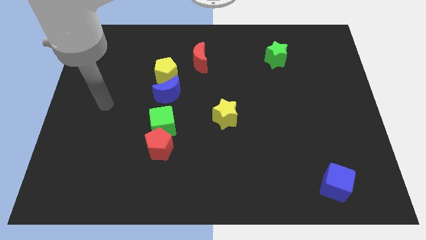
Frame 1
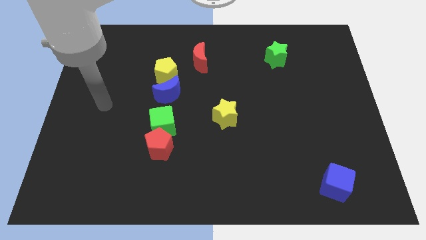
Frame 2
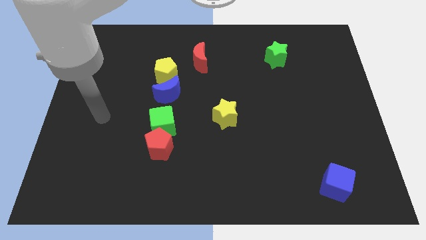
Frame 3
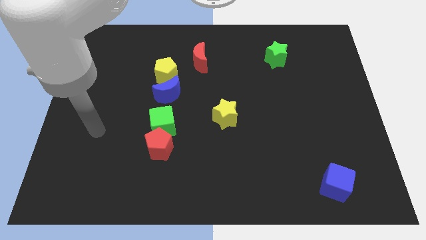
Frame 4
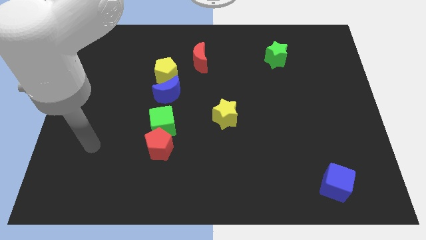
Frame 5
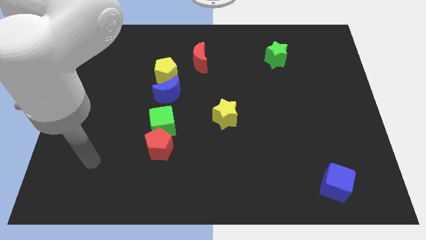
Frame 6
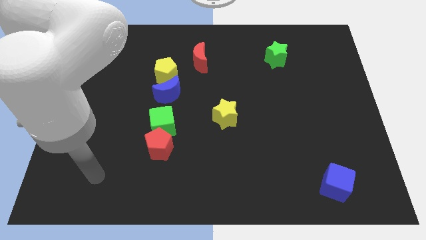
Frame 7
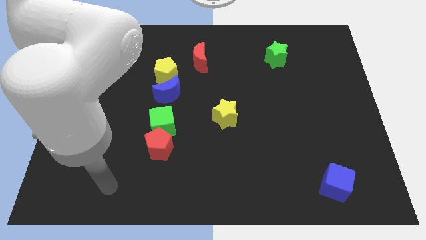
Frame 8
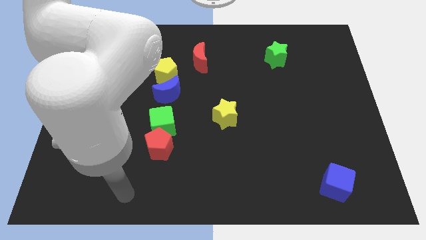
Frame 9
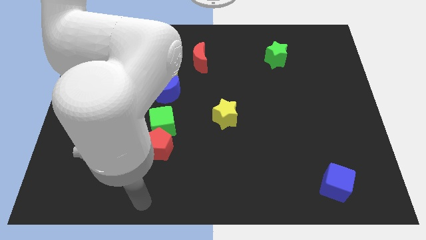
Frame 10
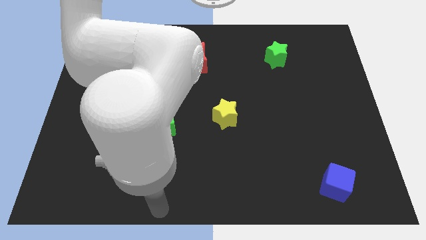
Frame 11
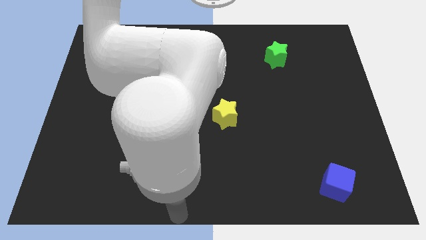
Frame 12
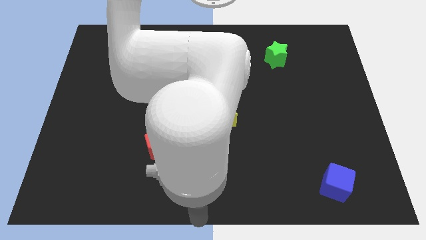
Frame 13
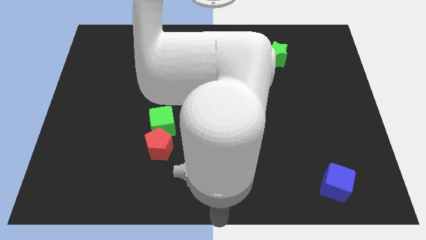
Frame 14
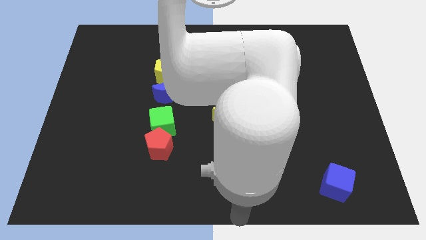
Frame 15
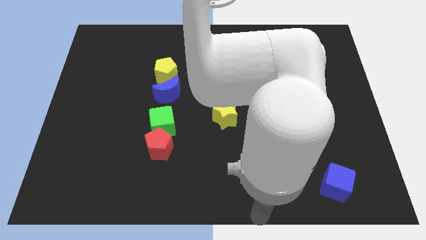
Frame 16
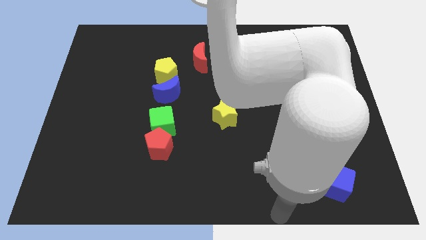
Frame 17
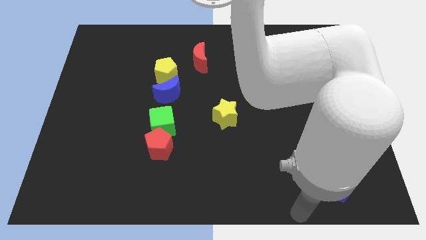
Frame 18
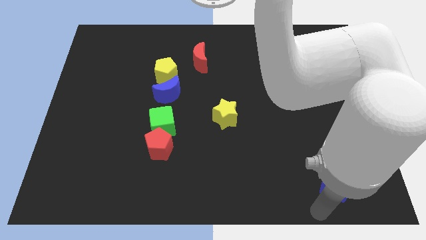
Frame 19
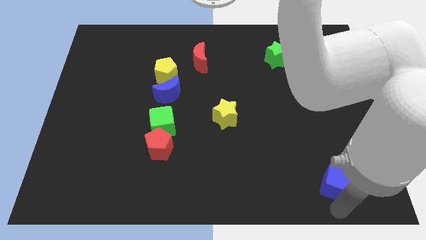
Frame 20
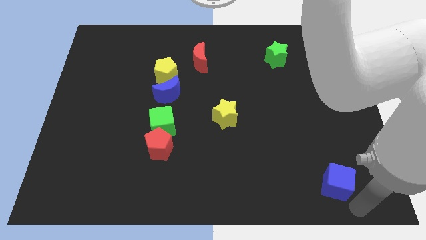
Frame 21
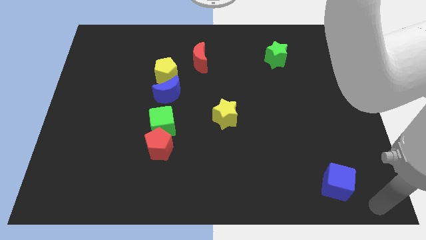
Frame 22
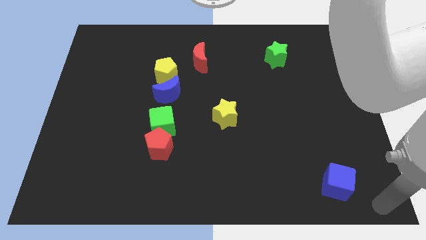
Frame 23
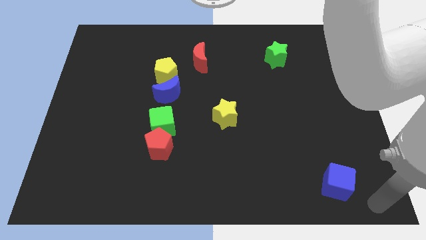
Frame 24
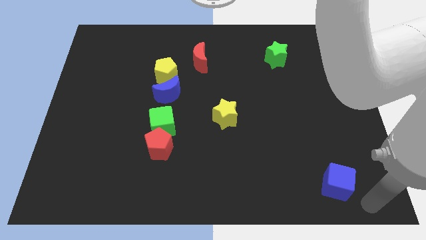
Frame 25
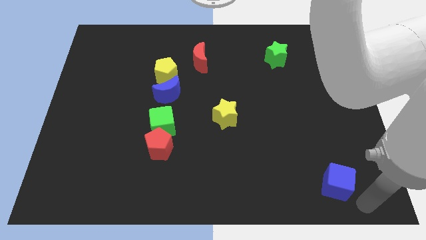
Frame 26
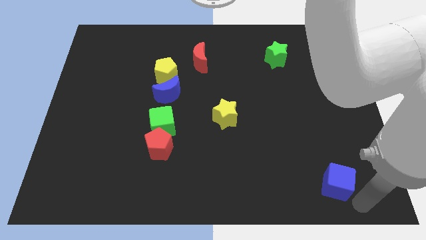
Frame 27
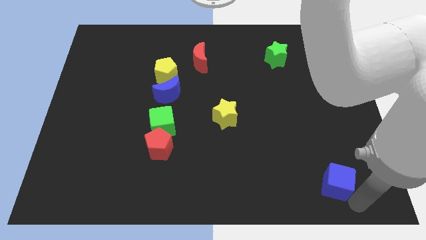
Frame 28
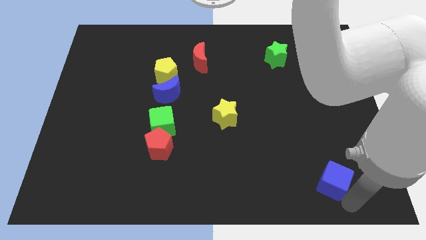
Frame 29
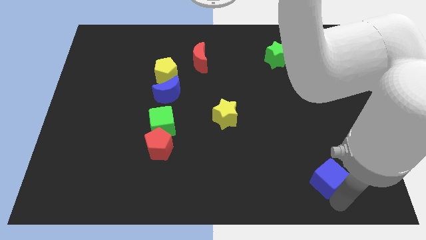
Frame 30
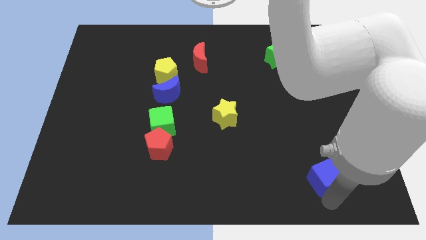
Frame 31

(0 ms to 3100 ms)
move your arm to the bottom side of the blue cube

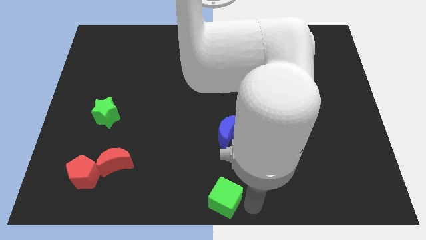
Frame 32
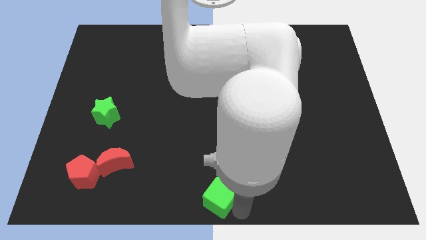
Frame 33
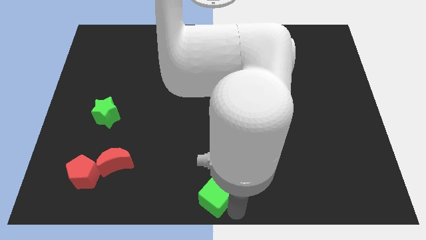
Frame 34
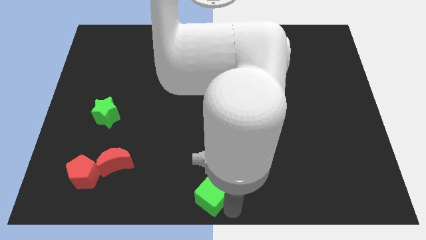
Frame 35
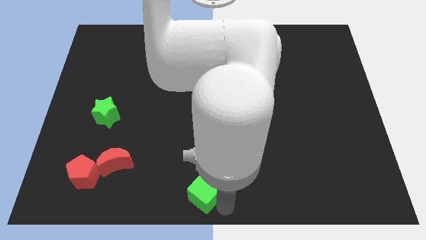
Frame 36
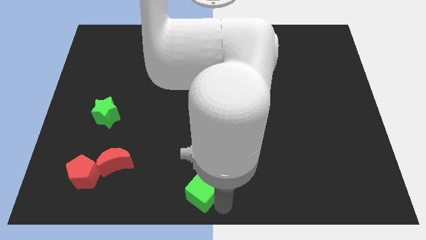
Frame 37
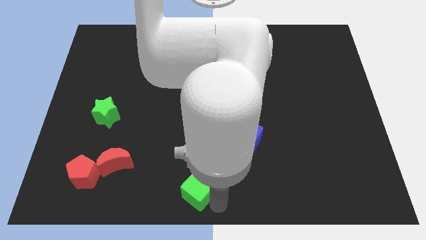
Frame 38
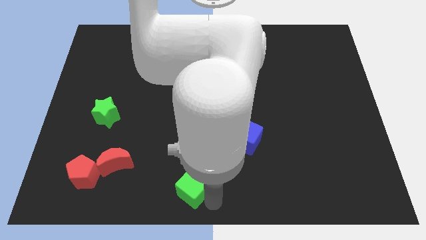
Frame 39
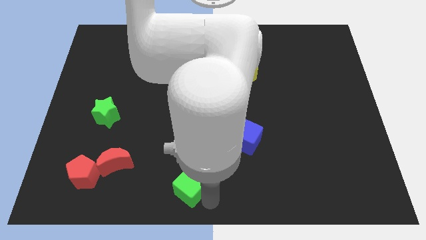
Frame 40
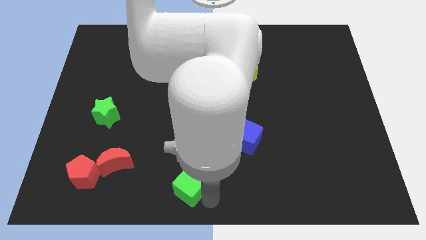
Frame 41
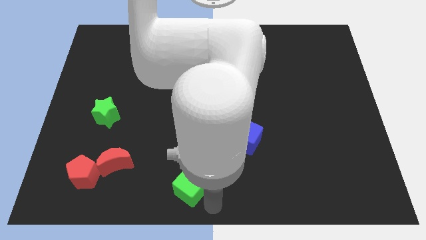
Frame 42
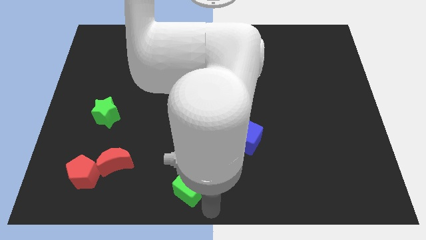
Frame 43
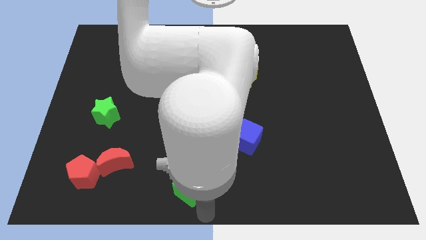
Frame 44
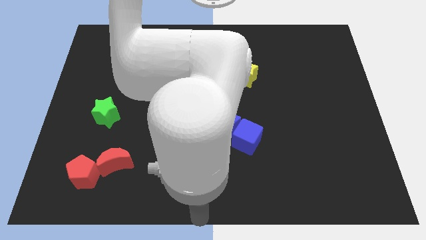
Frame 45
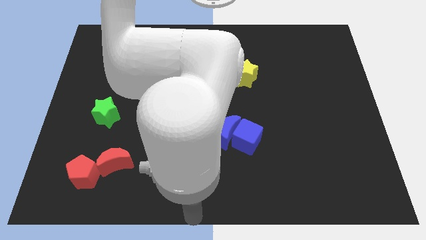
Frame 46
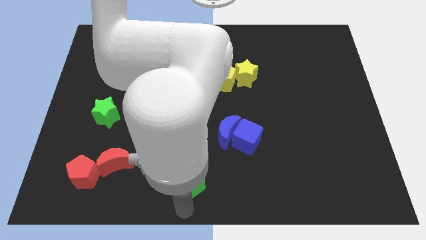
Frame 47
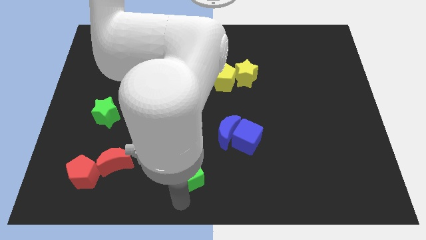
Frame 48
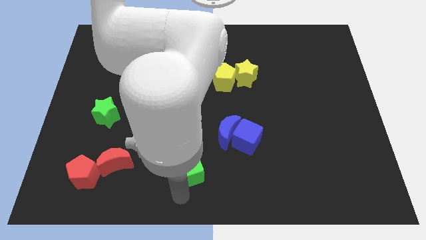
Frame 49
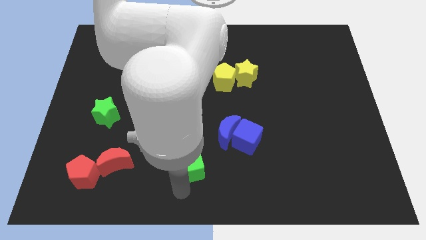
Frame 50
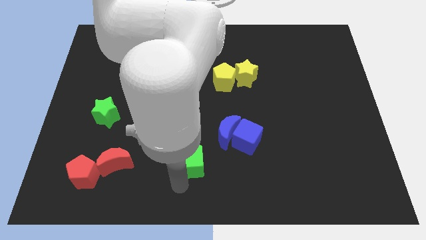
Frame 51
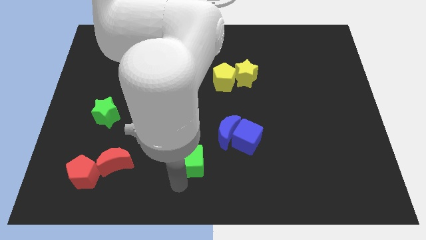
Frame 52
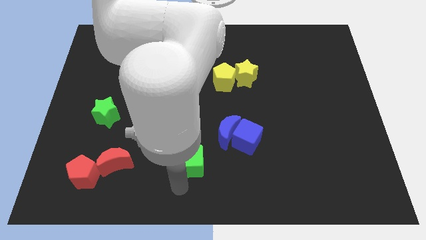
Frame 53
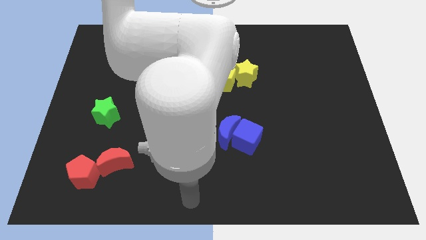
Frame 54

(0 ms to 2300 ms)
move the green cube to the right of red blocks

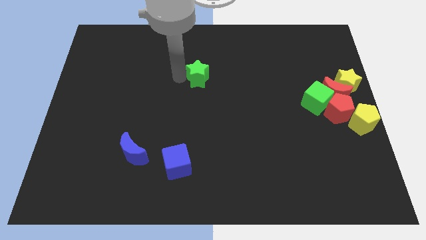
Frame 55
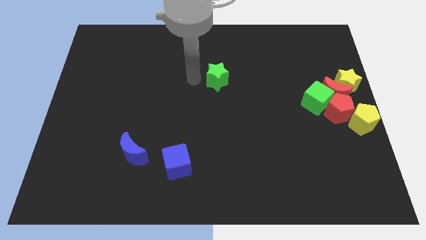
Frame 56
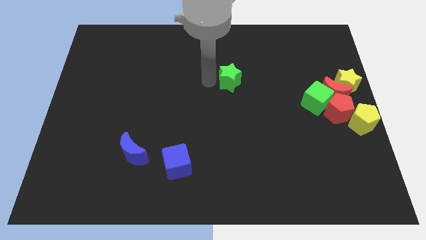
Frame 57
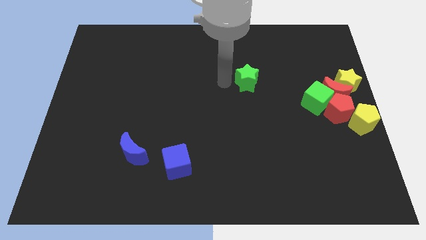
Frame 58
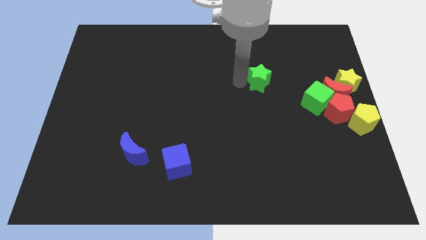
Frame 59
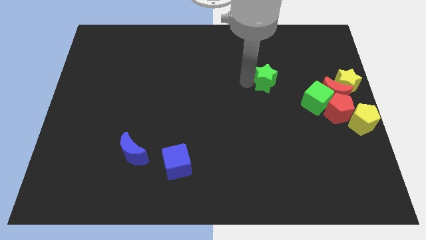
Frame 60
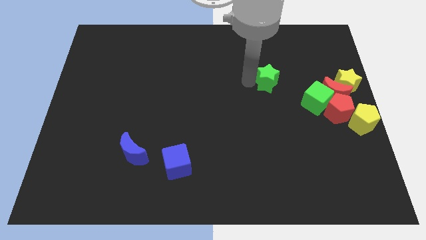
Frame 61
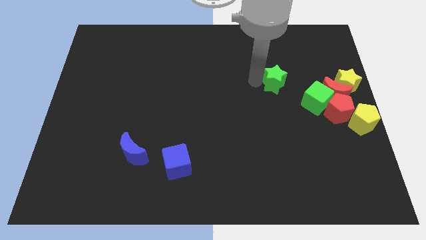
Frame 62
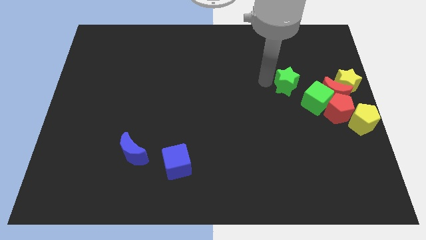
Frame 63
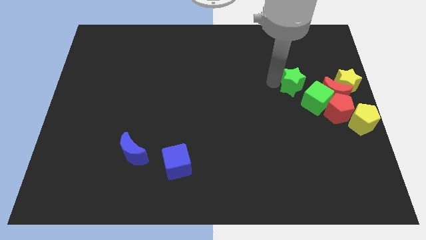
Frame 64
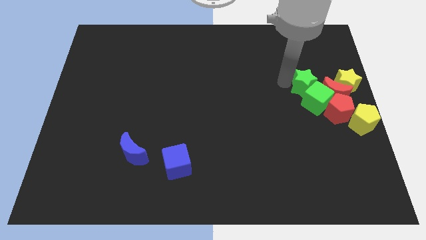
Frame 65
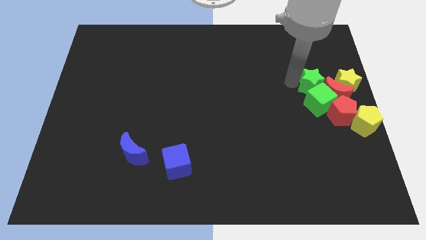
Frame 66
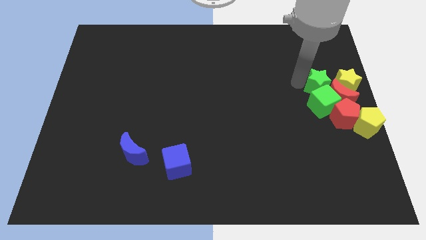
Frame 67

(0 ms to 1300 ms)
push green star into the green cube

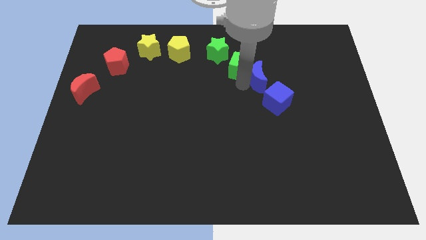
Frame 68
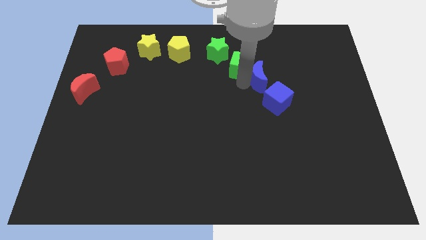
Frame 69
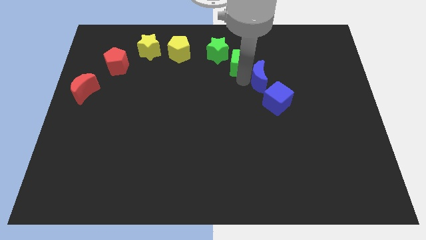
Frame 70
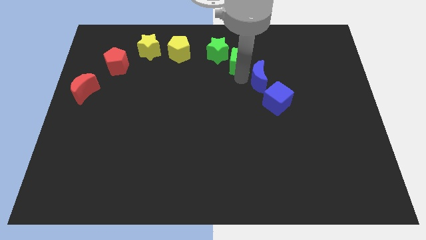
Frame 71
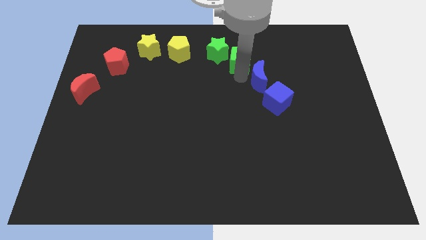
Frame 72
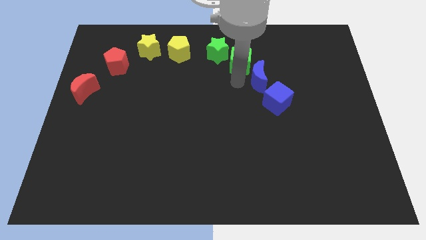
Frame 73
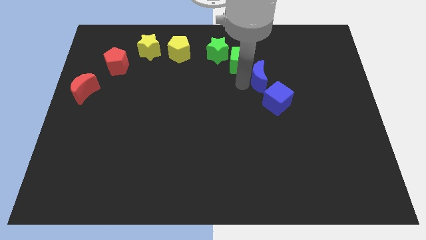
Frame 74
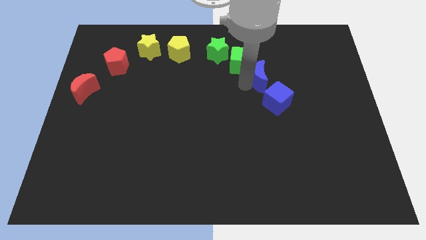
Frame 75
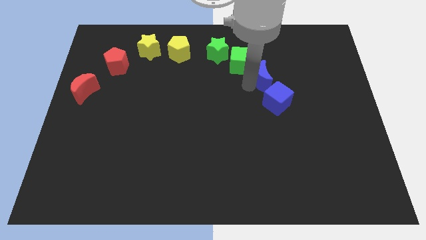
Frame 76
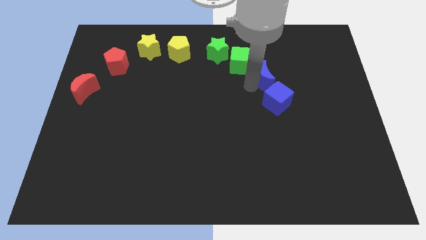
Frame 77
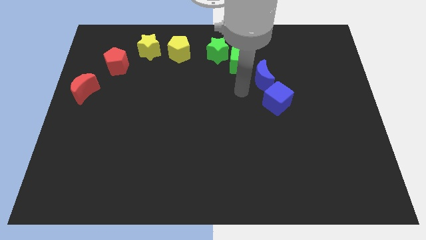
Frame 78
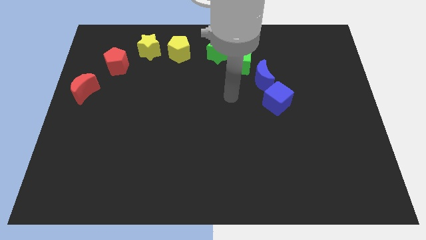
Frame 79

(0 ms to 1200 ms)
separate the green cube and blue crescent

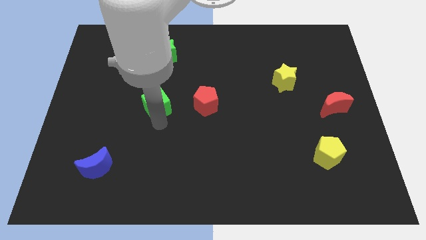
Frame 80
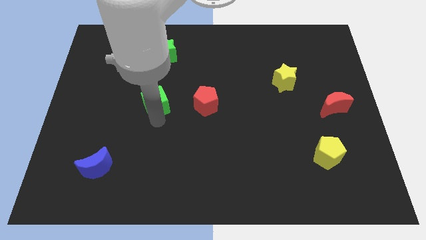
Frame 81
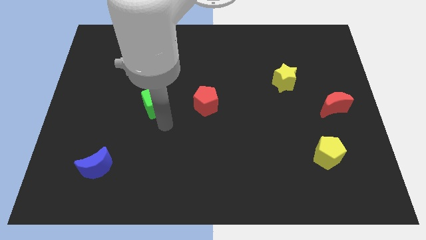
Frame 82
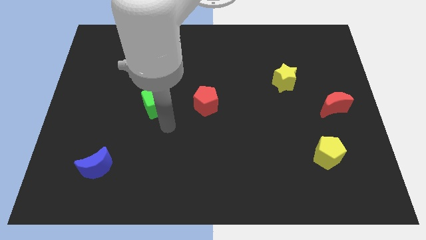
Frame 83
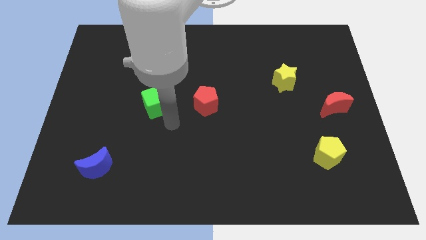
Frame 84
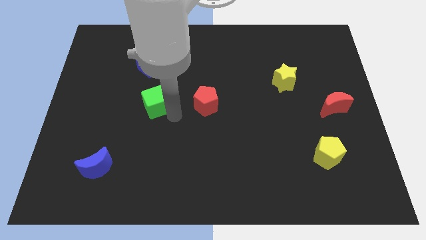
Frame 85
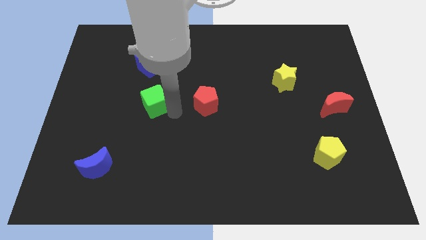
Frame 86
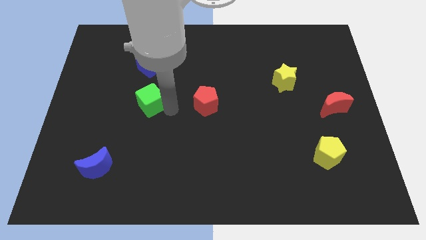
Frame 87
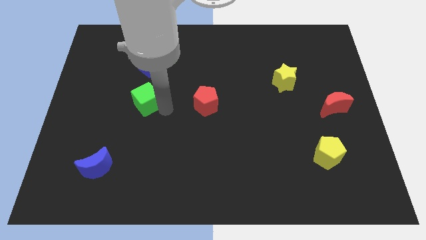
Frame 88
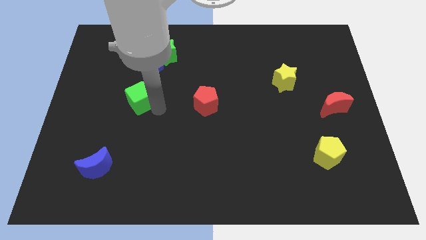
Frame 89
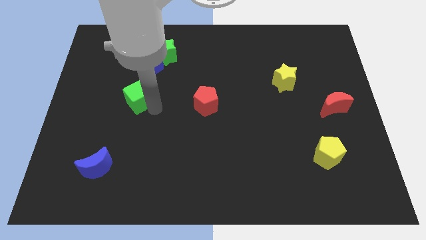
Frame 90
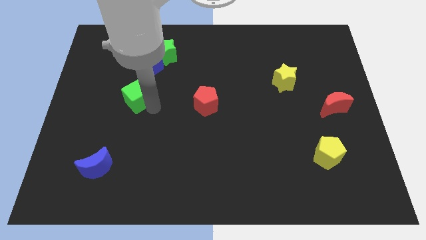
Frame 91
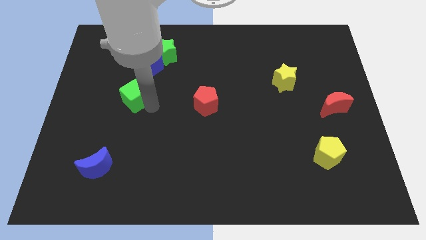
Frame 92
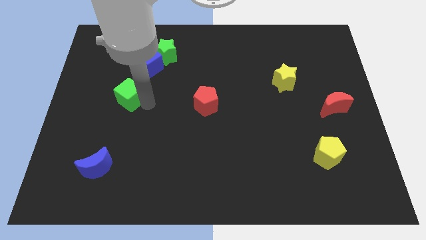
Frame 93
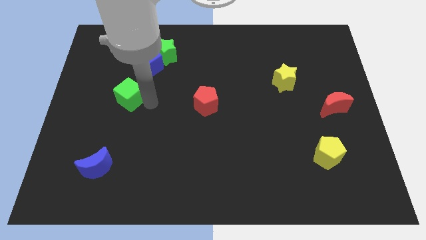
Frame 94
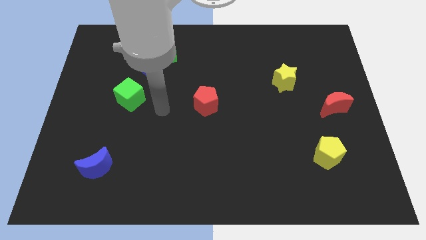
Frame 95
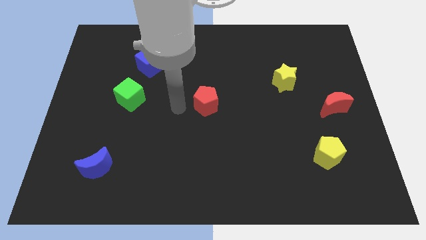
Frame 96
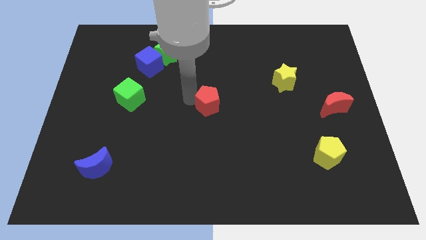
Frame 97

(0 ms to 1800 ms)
put the green cube between the blue moon and blue cube
